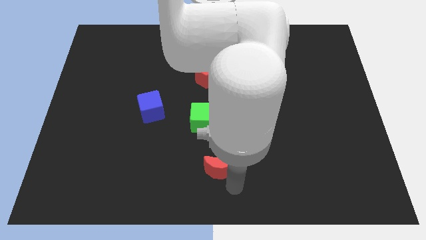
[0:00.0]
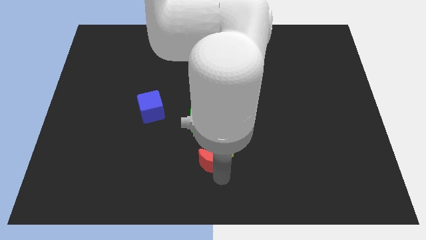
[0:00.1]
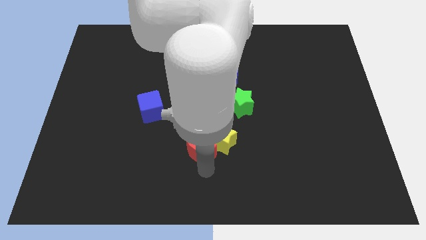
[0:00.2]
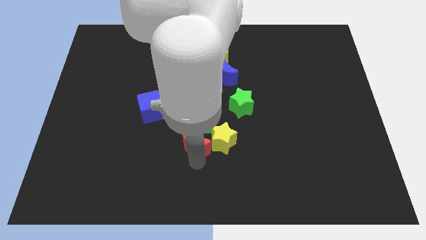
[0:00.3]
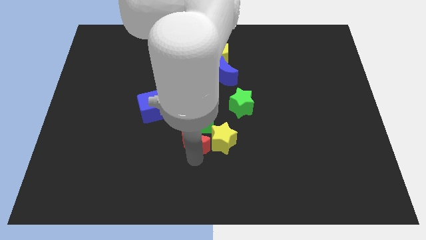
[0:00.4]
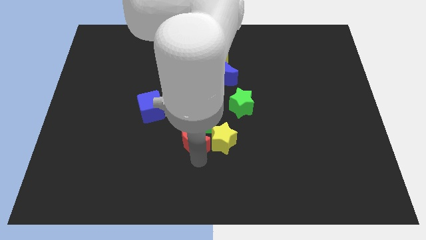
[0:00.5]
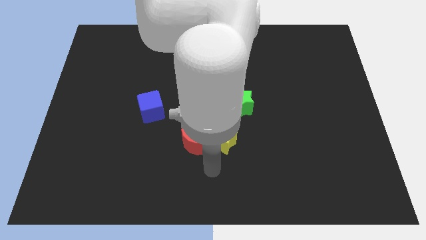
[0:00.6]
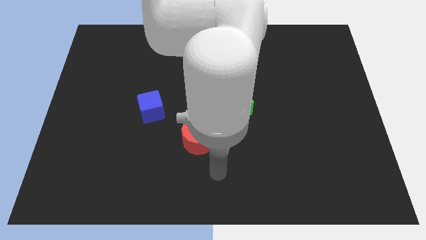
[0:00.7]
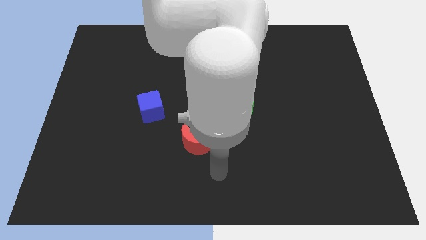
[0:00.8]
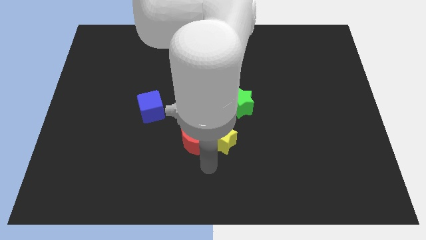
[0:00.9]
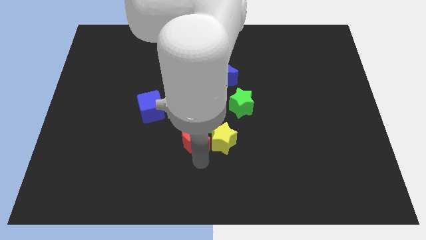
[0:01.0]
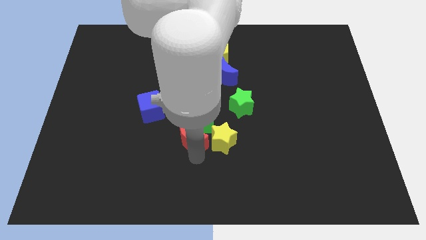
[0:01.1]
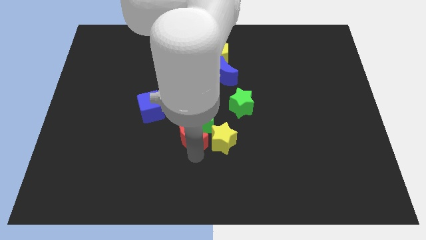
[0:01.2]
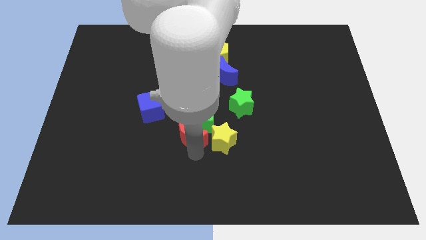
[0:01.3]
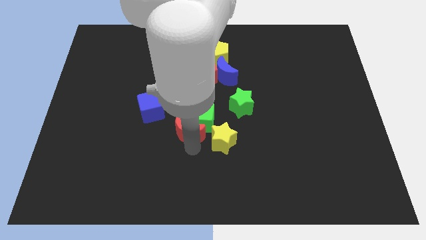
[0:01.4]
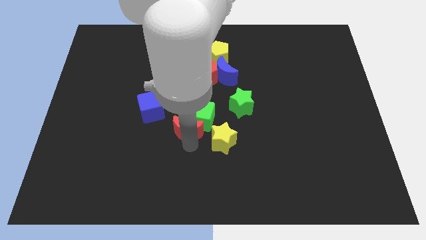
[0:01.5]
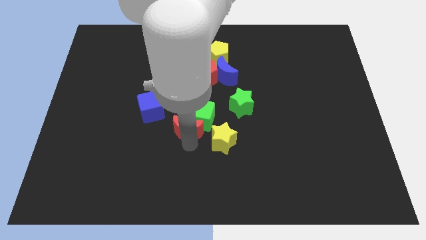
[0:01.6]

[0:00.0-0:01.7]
move red crescent into green cube towards center

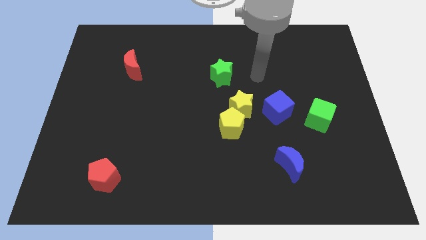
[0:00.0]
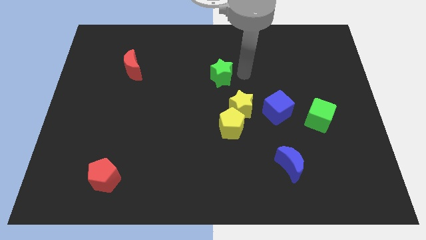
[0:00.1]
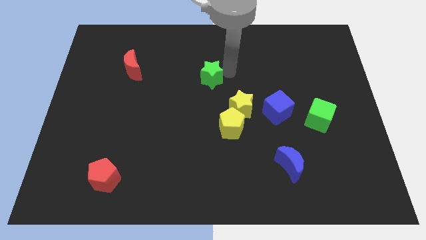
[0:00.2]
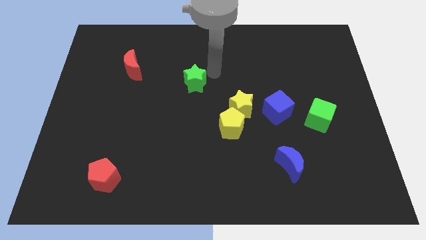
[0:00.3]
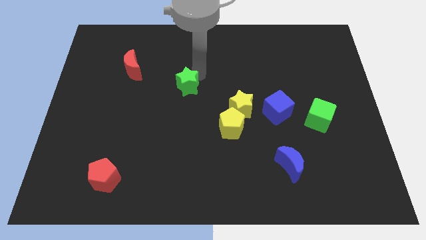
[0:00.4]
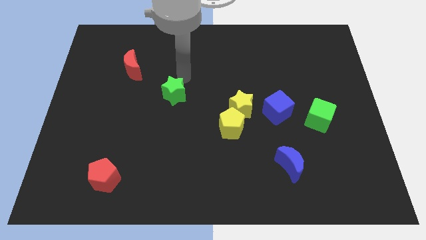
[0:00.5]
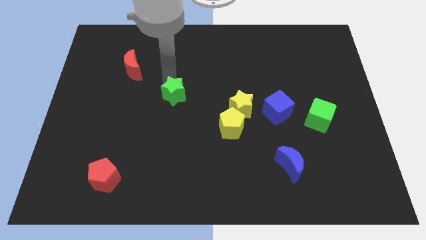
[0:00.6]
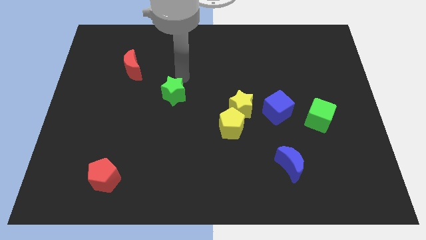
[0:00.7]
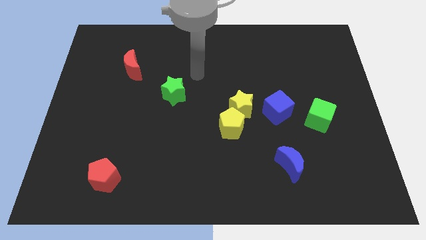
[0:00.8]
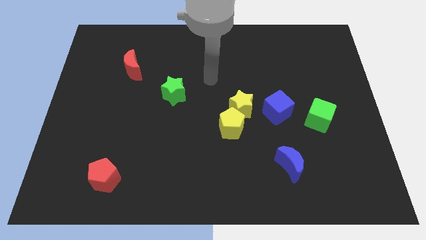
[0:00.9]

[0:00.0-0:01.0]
push the green star diagonally right of the red crescent

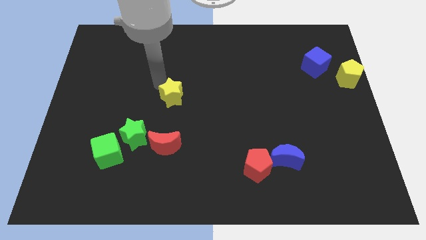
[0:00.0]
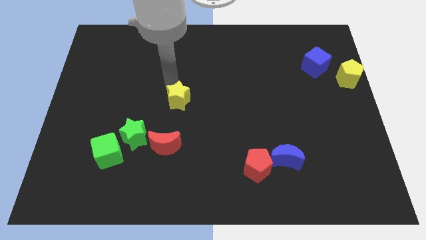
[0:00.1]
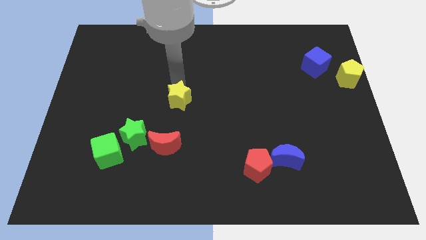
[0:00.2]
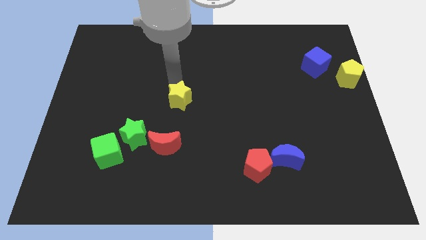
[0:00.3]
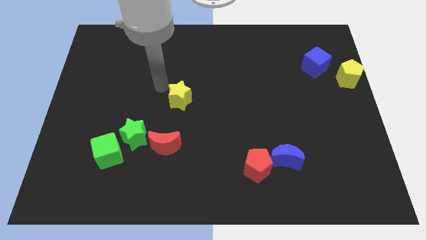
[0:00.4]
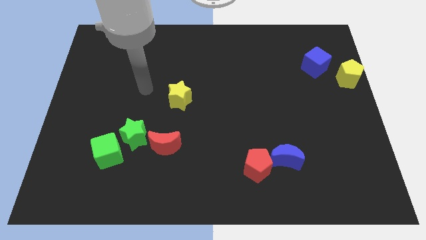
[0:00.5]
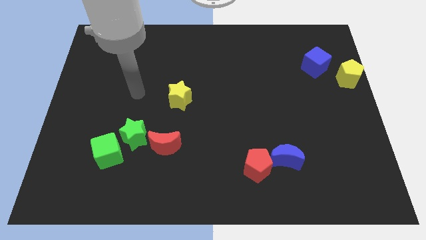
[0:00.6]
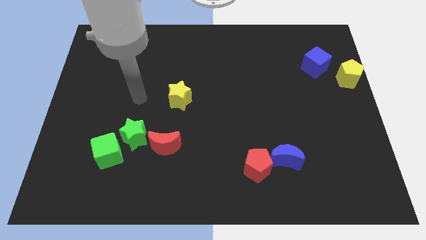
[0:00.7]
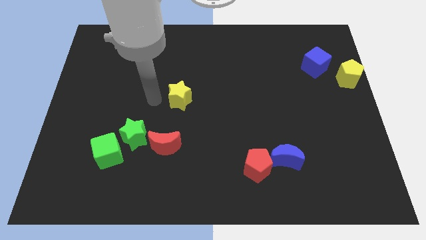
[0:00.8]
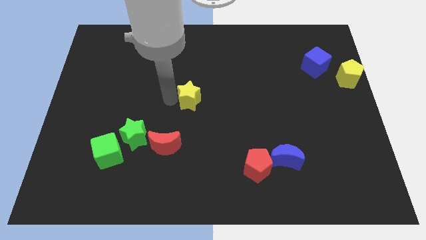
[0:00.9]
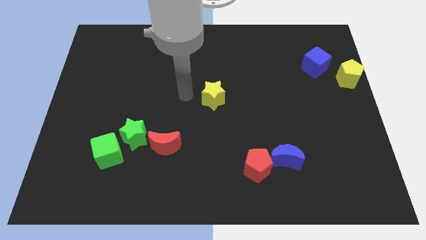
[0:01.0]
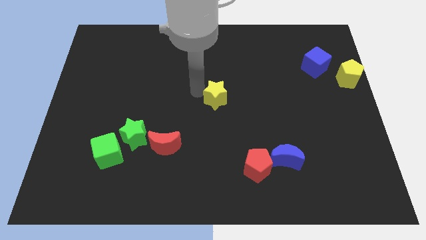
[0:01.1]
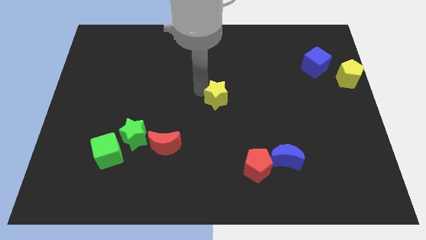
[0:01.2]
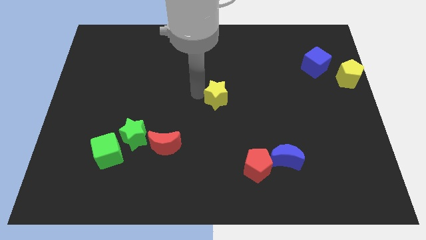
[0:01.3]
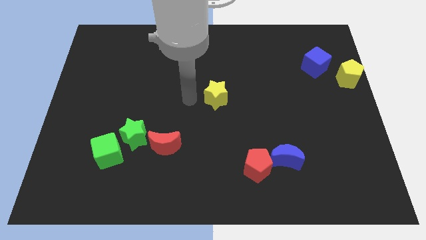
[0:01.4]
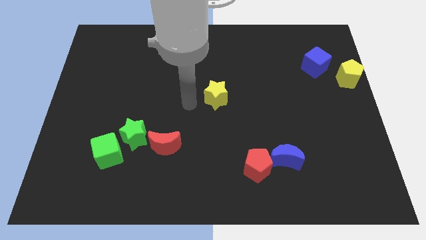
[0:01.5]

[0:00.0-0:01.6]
push the yellow star at the center of the board

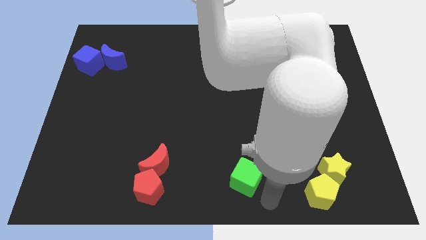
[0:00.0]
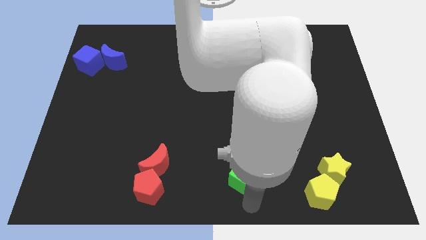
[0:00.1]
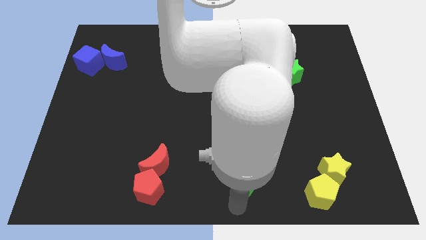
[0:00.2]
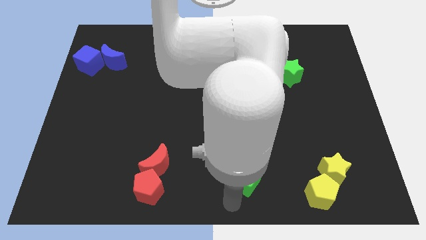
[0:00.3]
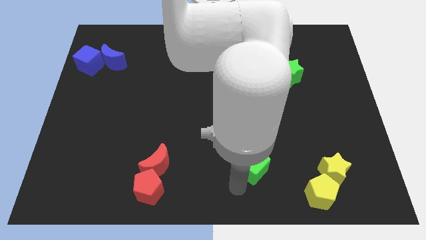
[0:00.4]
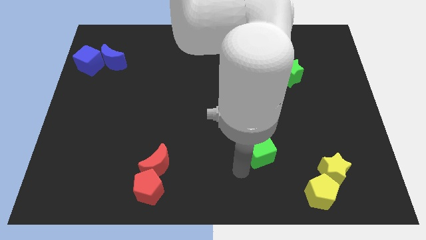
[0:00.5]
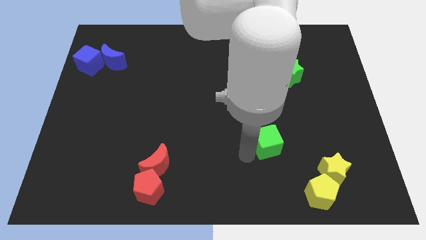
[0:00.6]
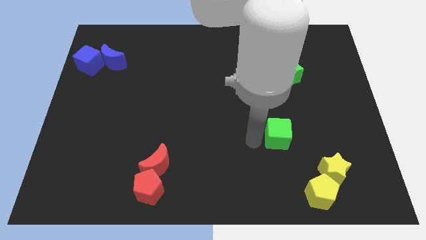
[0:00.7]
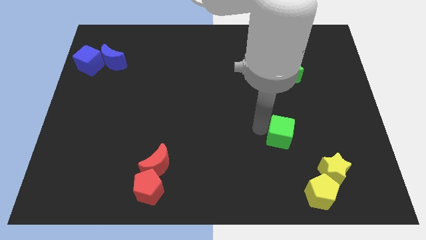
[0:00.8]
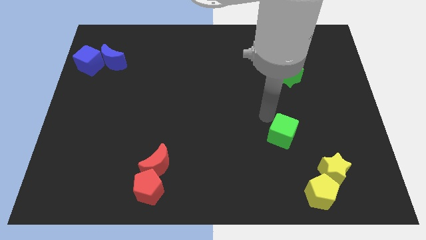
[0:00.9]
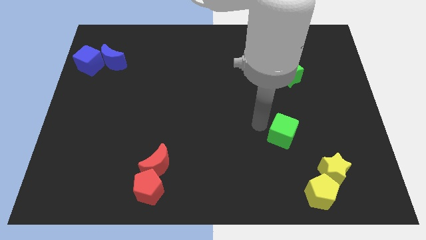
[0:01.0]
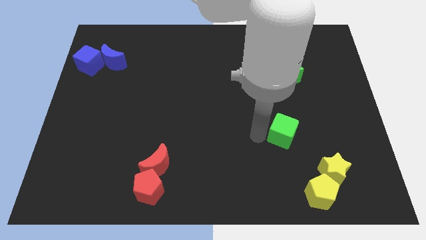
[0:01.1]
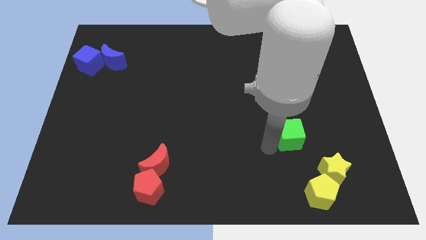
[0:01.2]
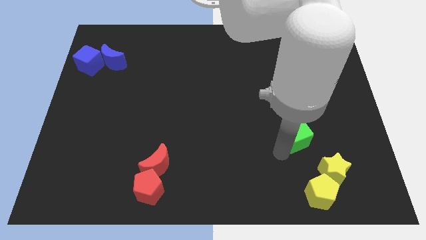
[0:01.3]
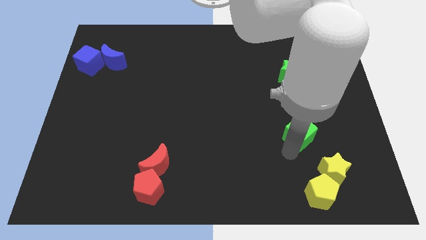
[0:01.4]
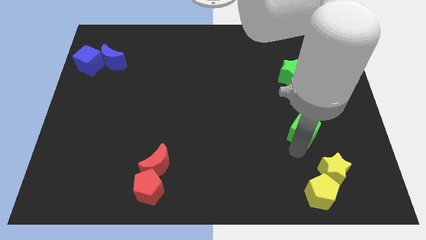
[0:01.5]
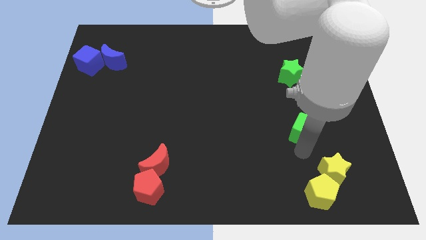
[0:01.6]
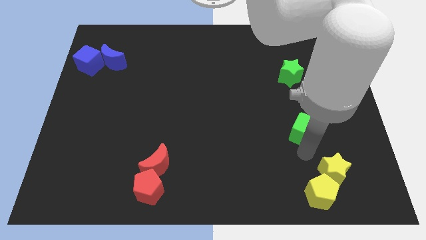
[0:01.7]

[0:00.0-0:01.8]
place the green cube to the top of the yellow pentagon

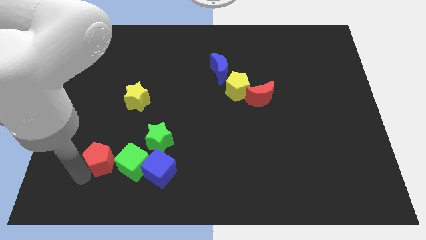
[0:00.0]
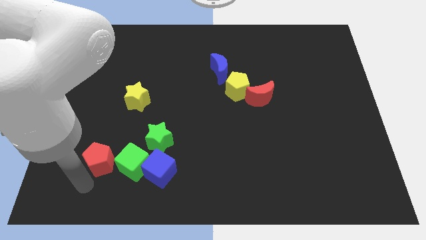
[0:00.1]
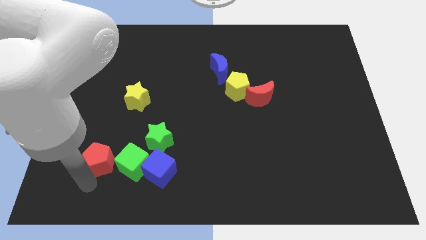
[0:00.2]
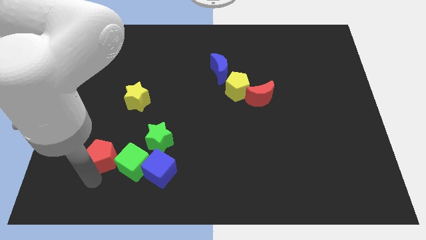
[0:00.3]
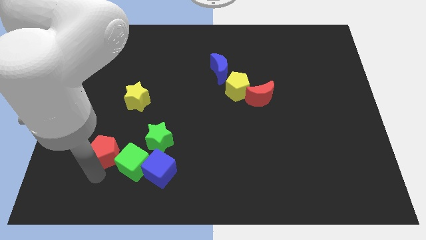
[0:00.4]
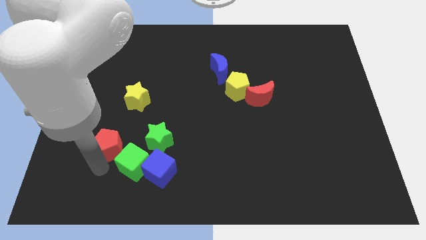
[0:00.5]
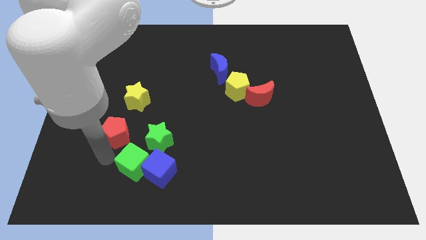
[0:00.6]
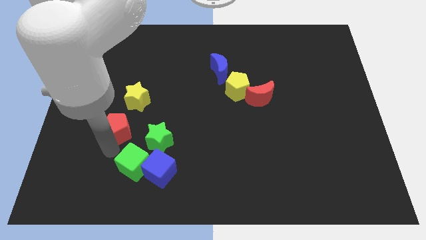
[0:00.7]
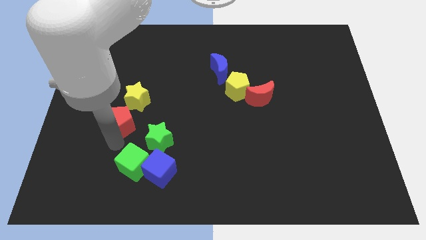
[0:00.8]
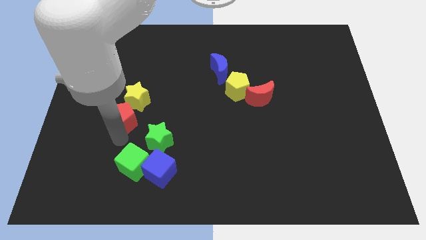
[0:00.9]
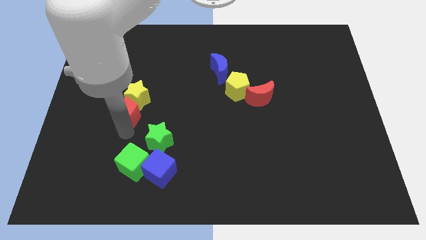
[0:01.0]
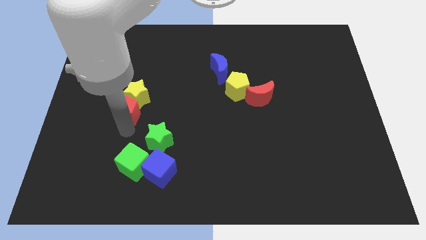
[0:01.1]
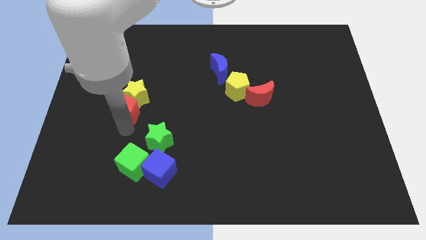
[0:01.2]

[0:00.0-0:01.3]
push the red pentagon into the yellow star

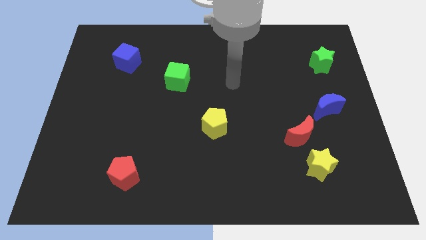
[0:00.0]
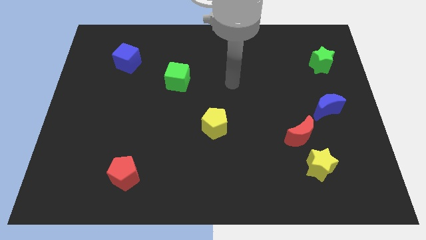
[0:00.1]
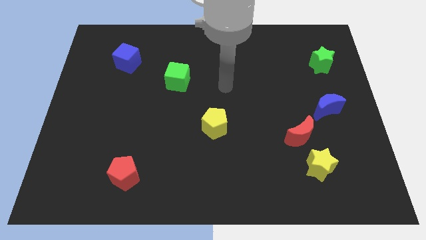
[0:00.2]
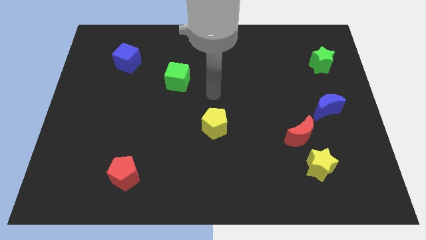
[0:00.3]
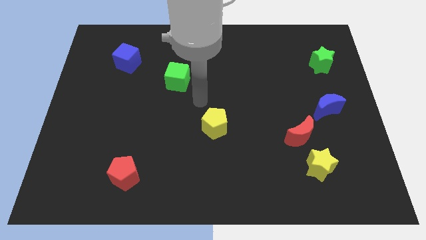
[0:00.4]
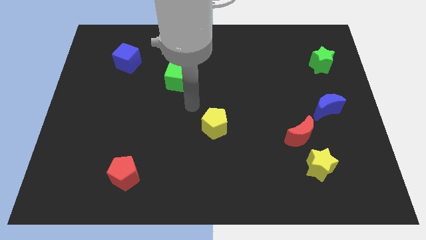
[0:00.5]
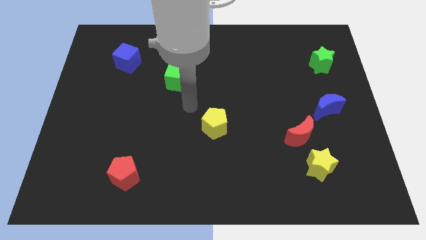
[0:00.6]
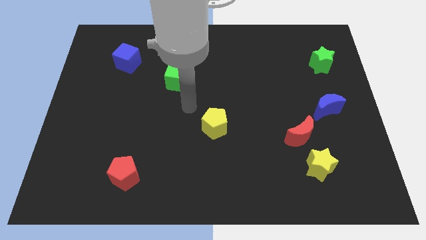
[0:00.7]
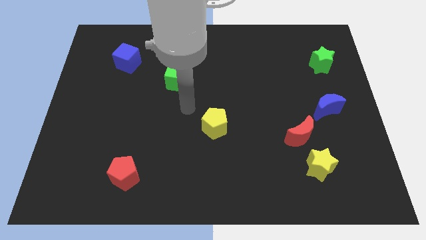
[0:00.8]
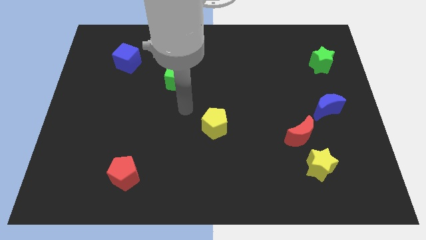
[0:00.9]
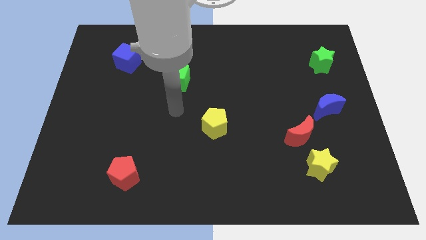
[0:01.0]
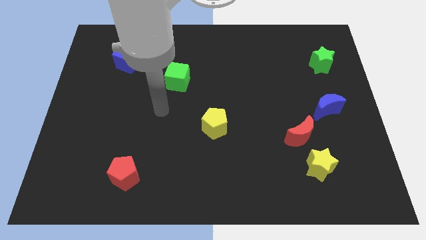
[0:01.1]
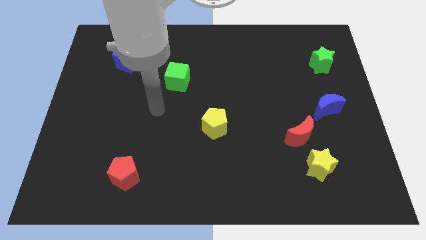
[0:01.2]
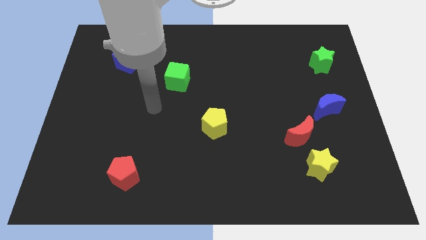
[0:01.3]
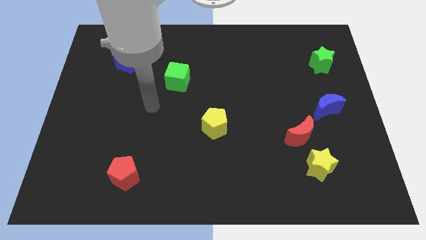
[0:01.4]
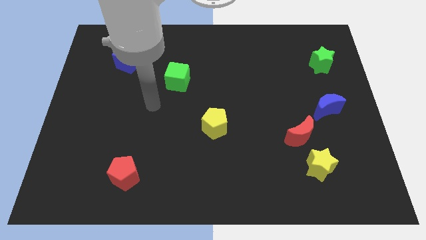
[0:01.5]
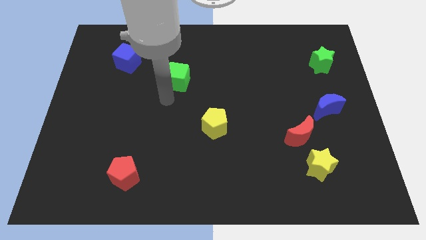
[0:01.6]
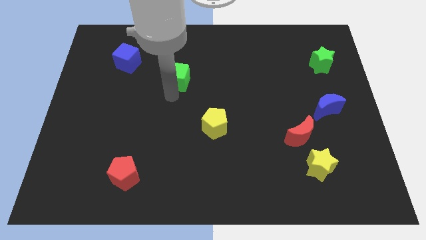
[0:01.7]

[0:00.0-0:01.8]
place your hand vertically below the green star
